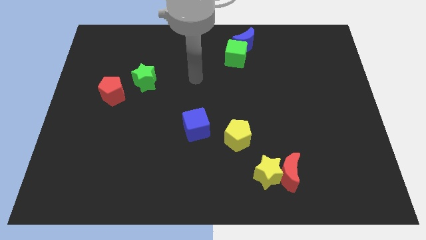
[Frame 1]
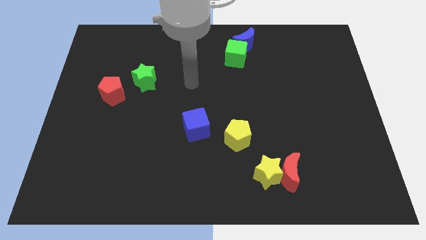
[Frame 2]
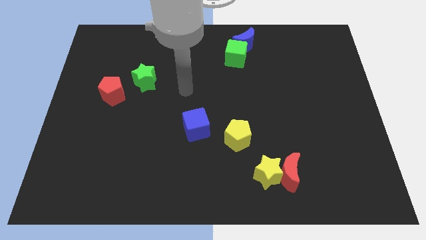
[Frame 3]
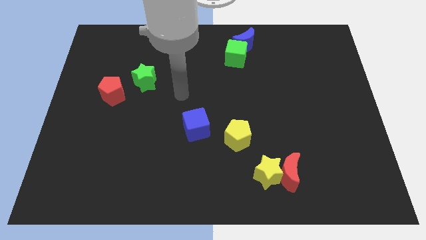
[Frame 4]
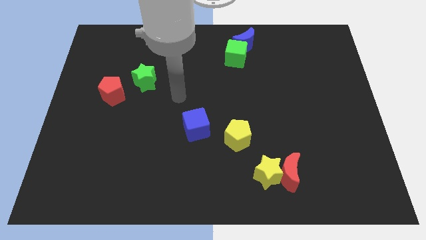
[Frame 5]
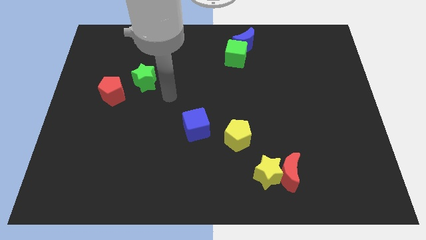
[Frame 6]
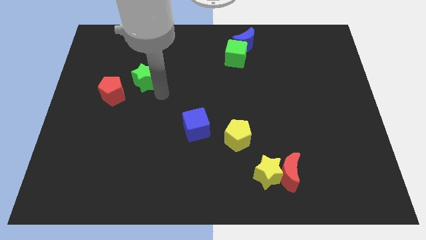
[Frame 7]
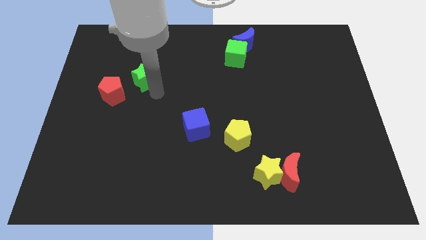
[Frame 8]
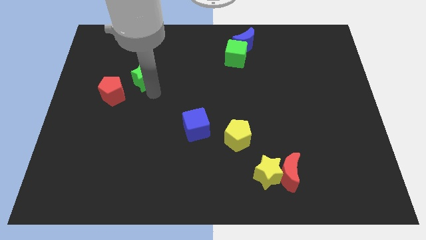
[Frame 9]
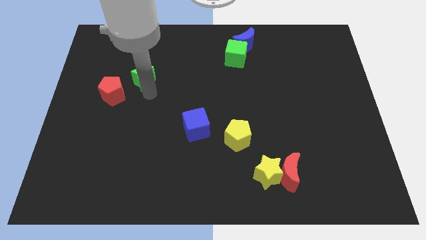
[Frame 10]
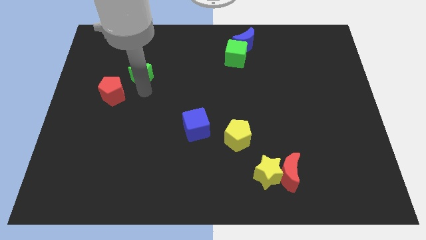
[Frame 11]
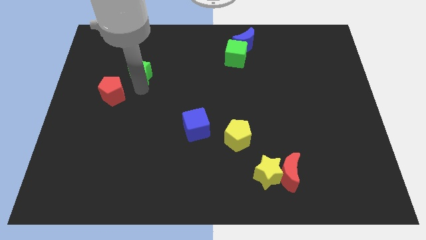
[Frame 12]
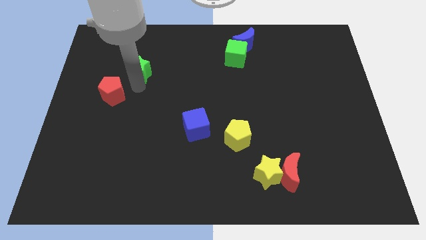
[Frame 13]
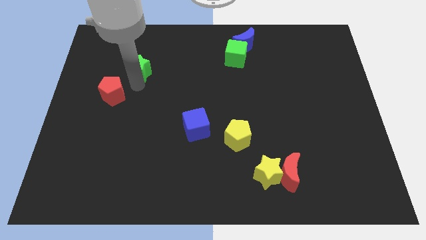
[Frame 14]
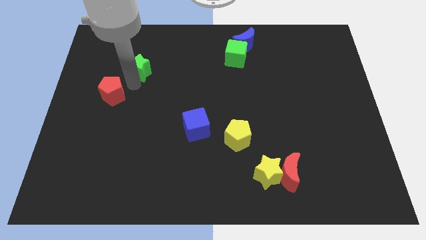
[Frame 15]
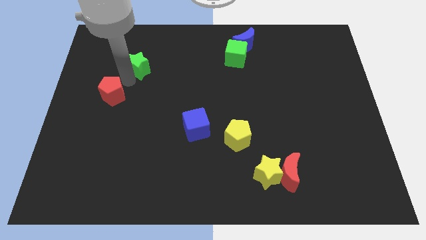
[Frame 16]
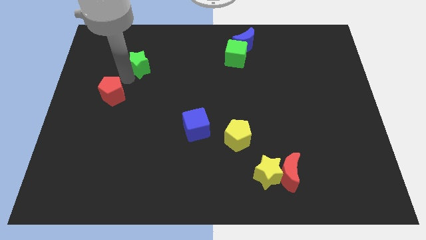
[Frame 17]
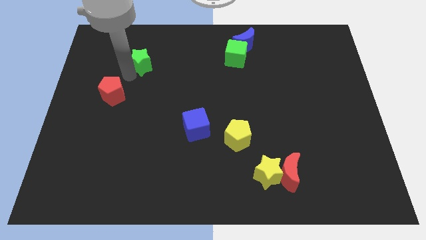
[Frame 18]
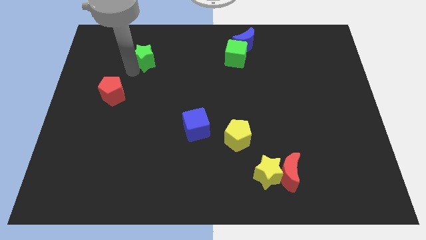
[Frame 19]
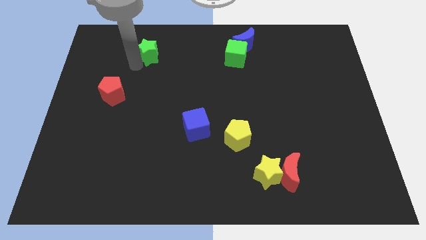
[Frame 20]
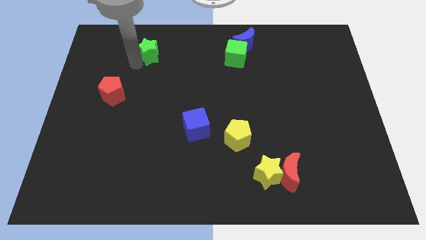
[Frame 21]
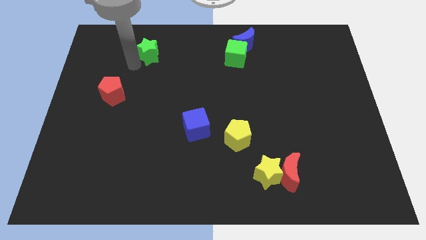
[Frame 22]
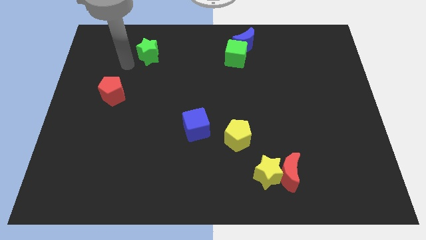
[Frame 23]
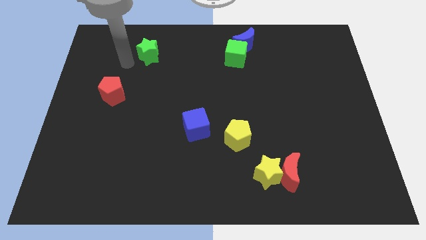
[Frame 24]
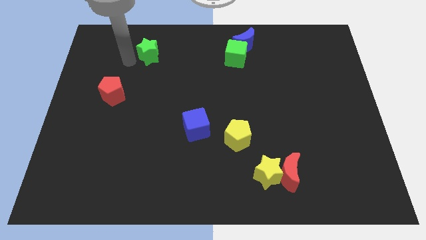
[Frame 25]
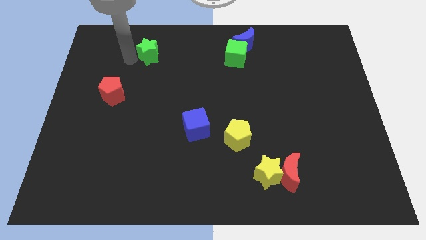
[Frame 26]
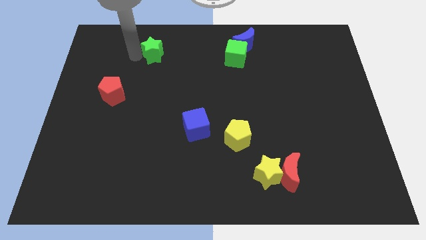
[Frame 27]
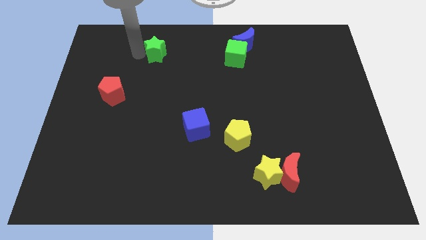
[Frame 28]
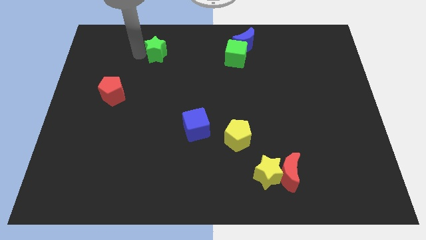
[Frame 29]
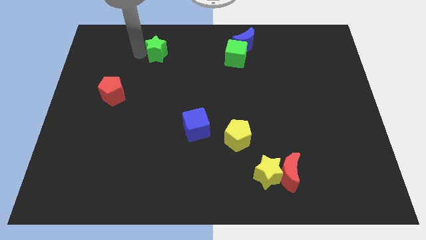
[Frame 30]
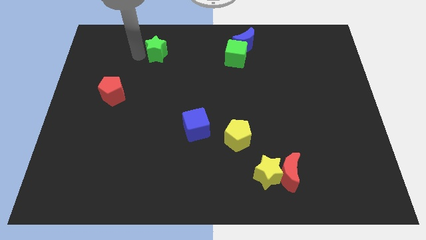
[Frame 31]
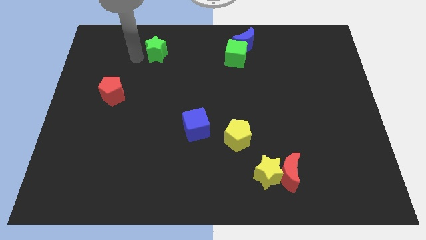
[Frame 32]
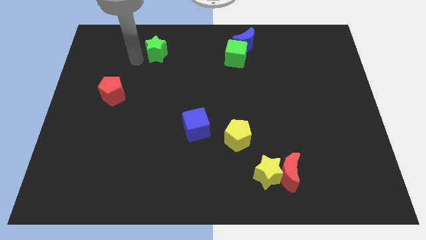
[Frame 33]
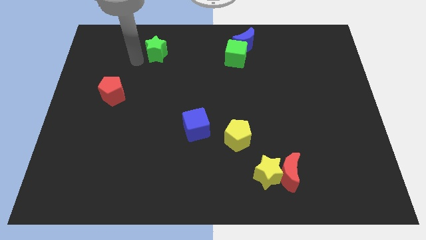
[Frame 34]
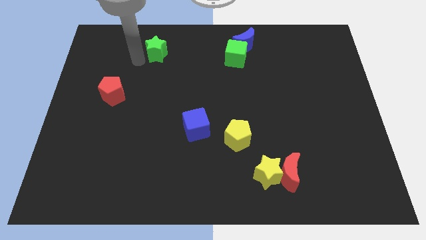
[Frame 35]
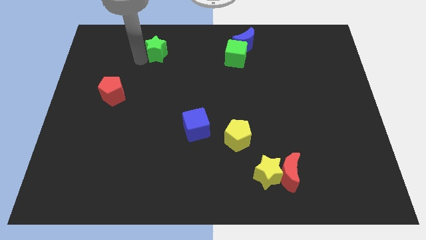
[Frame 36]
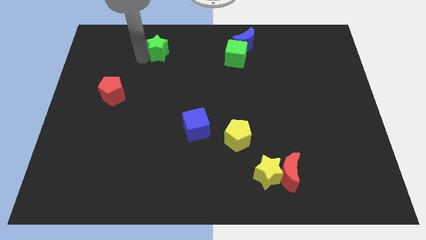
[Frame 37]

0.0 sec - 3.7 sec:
put the green star to the left side of the green cube

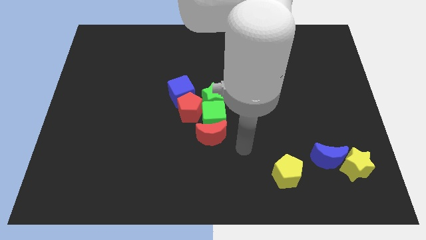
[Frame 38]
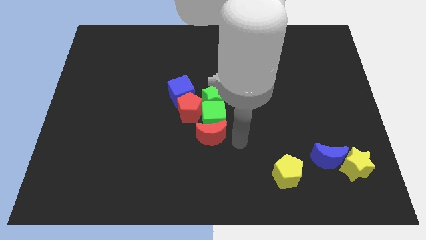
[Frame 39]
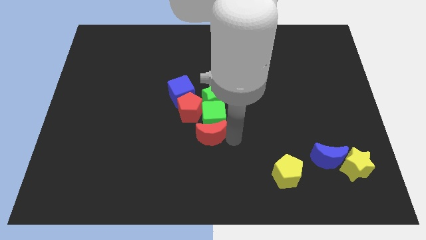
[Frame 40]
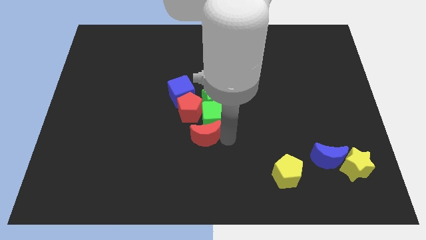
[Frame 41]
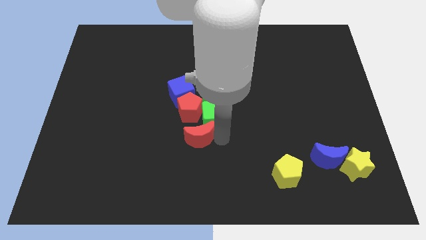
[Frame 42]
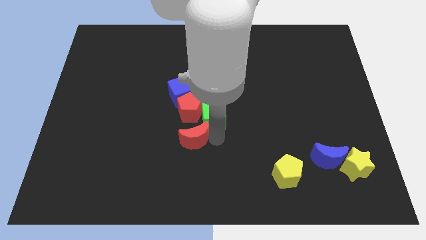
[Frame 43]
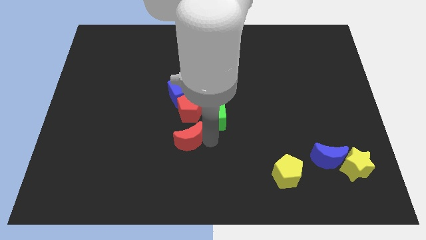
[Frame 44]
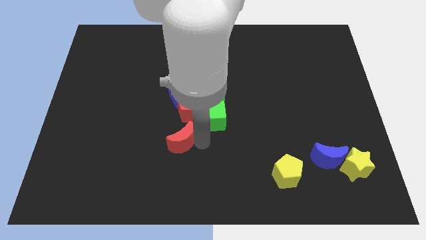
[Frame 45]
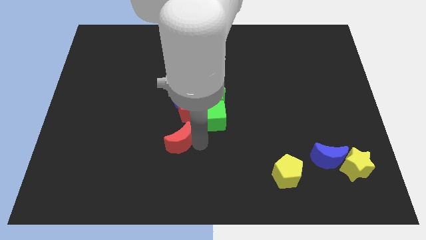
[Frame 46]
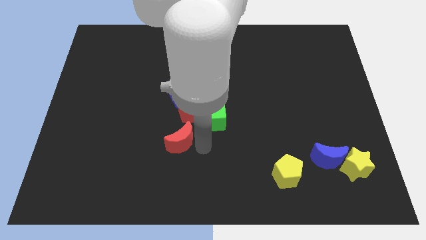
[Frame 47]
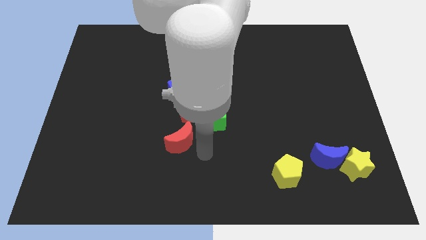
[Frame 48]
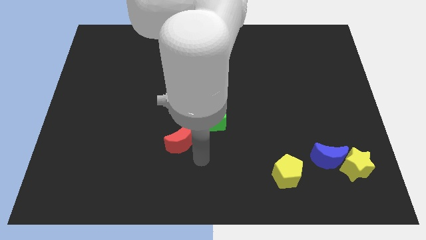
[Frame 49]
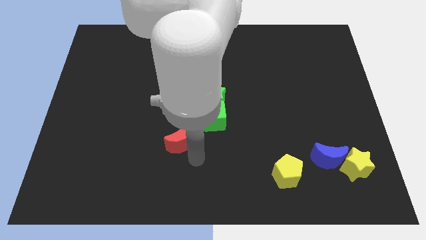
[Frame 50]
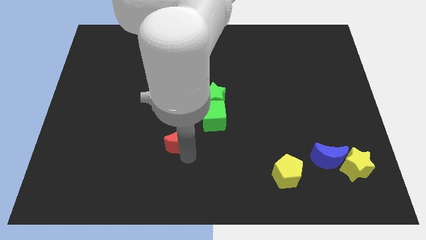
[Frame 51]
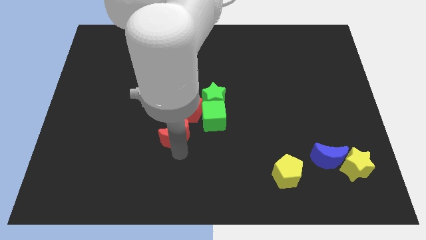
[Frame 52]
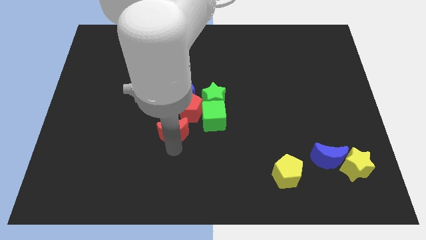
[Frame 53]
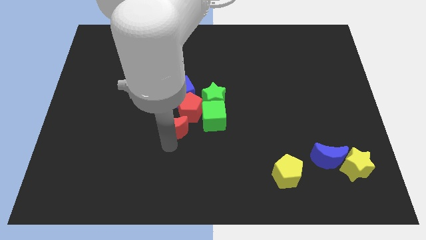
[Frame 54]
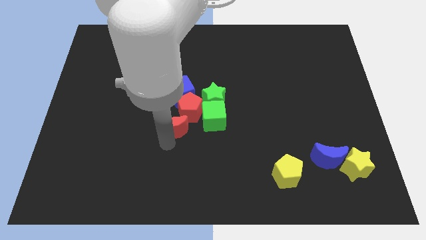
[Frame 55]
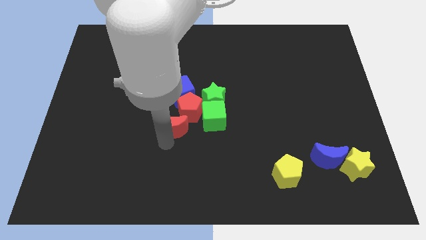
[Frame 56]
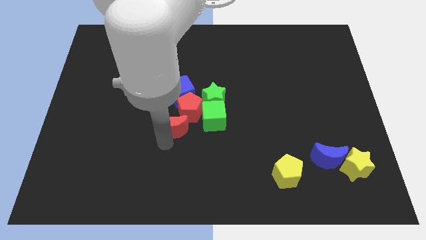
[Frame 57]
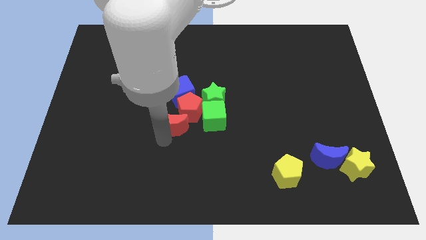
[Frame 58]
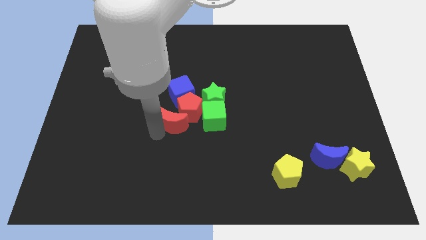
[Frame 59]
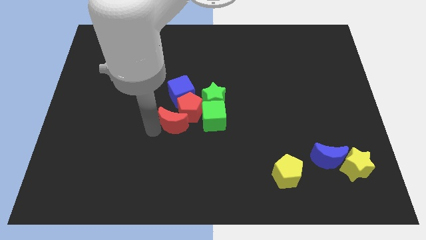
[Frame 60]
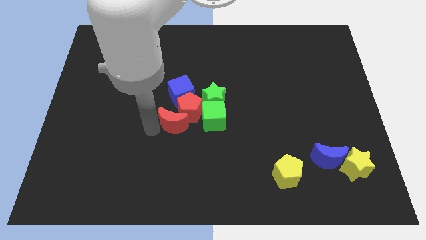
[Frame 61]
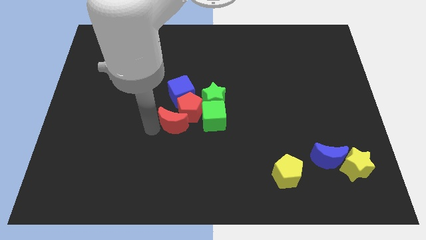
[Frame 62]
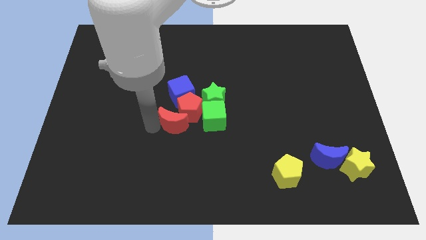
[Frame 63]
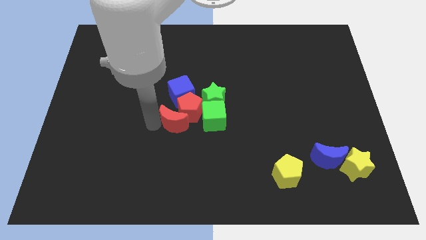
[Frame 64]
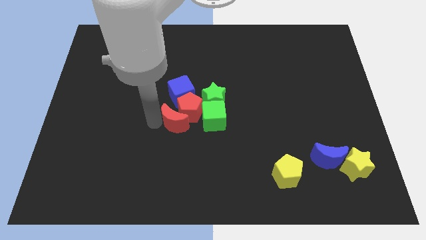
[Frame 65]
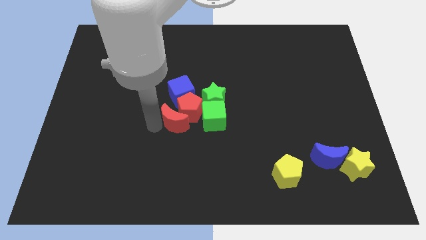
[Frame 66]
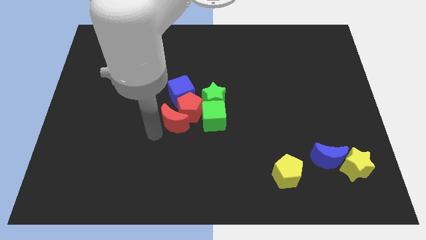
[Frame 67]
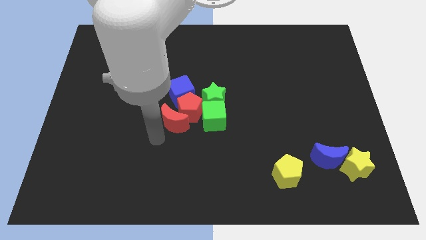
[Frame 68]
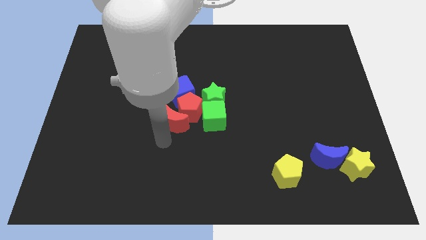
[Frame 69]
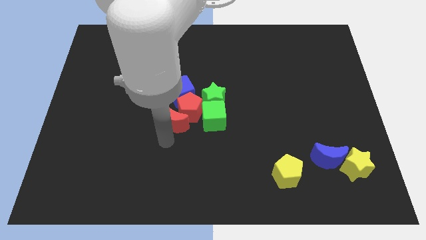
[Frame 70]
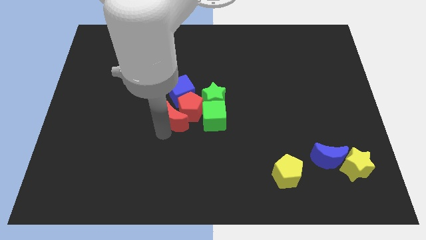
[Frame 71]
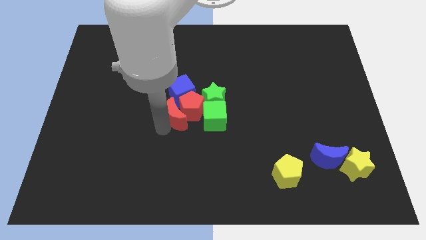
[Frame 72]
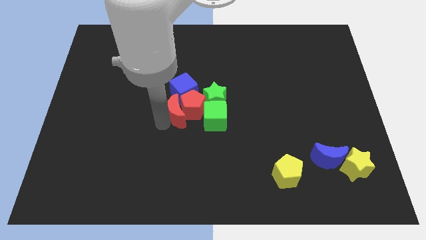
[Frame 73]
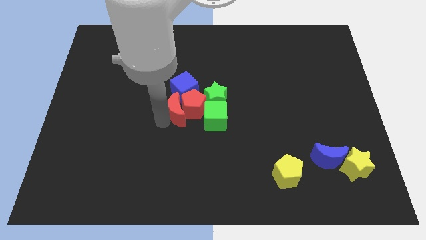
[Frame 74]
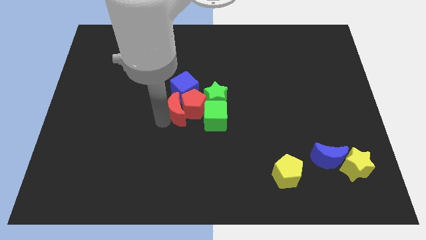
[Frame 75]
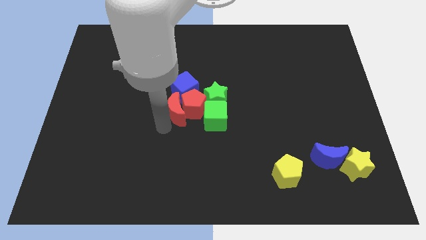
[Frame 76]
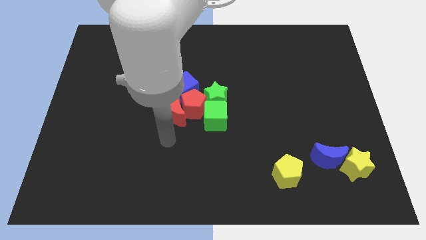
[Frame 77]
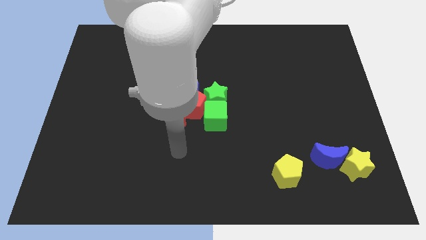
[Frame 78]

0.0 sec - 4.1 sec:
push the red crescent into the red pentagon

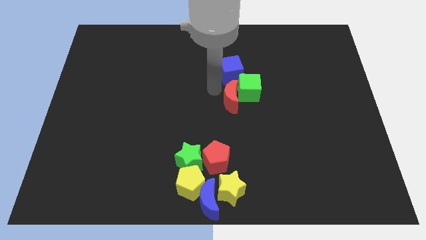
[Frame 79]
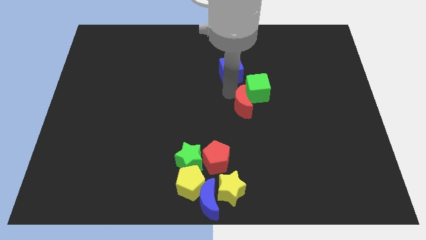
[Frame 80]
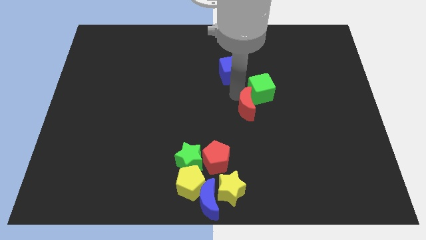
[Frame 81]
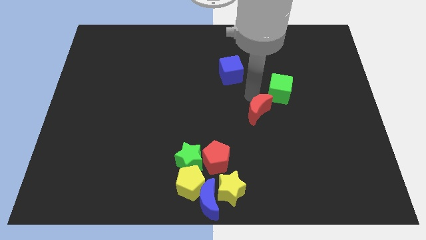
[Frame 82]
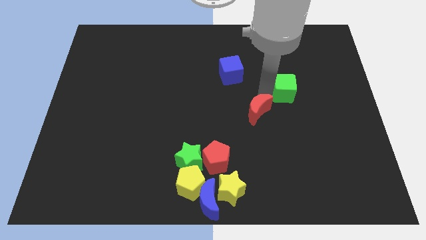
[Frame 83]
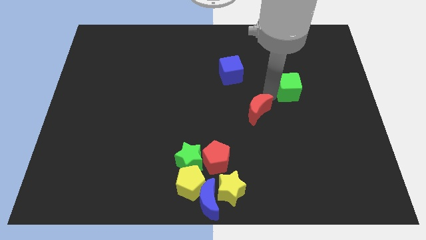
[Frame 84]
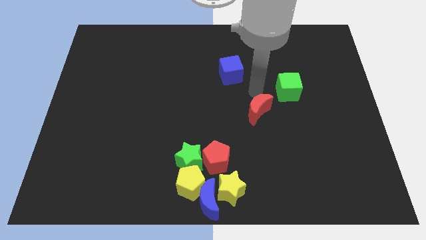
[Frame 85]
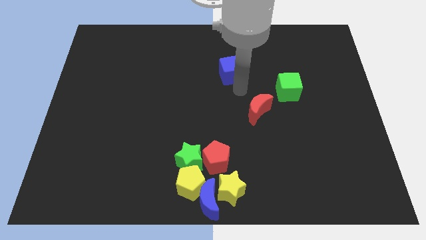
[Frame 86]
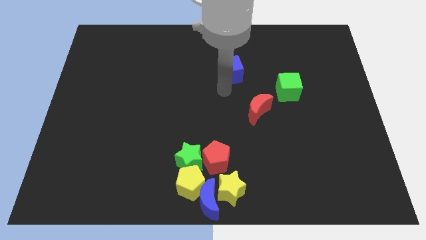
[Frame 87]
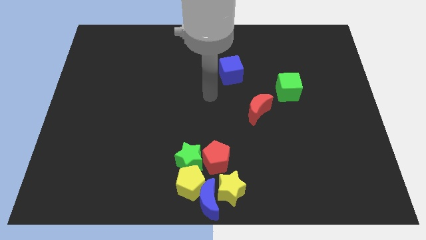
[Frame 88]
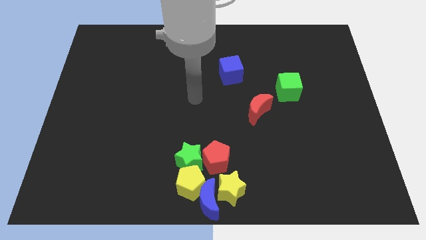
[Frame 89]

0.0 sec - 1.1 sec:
separate red crescent and green cube from blue cube

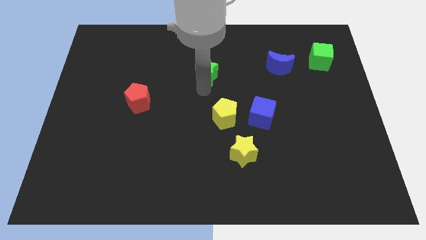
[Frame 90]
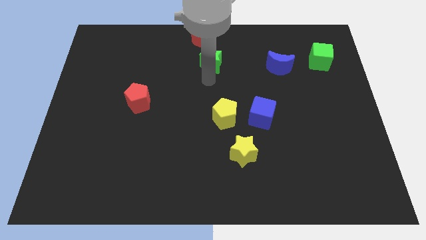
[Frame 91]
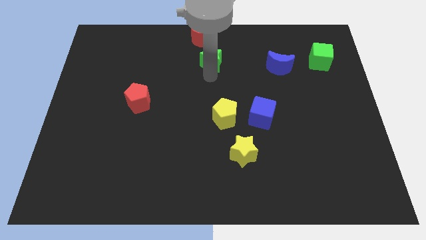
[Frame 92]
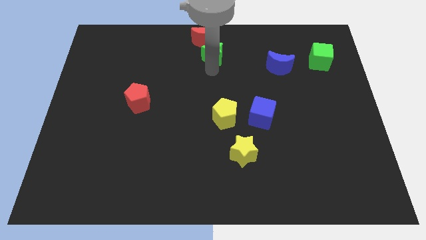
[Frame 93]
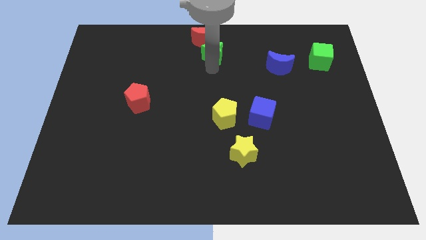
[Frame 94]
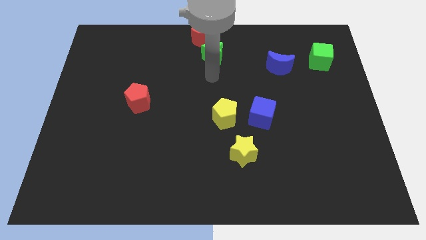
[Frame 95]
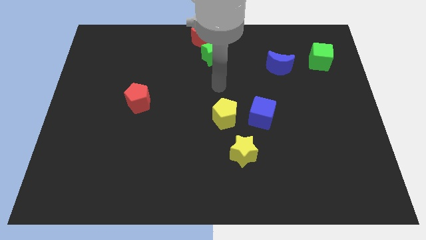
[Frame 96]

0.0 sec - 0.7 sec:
push the green star close to the red moon
